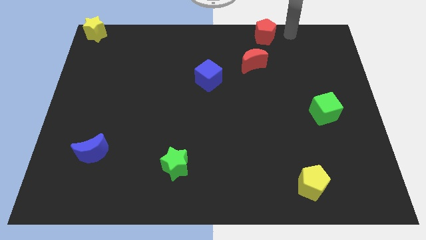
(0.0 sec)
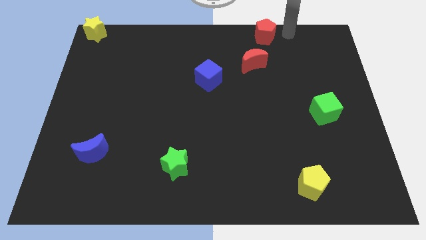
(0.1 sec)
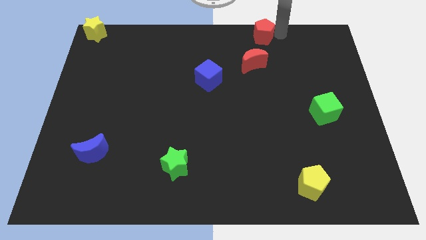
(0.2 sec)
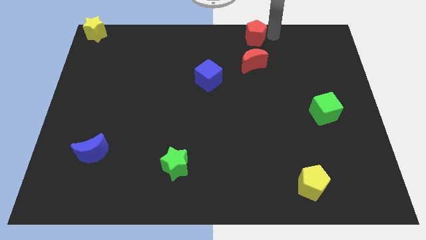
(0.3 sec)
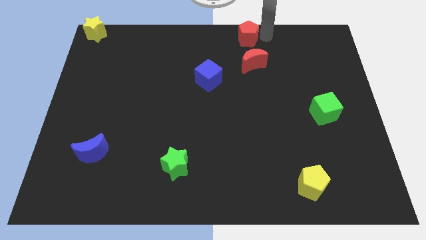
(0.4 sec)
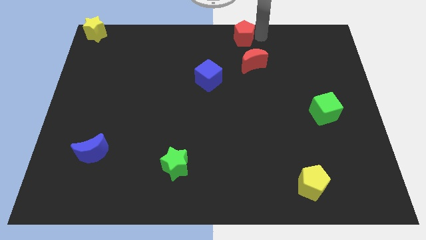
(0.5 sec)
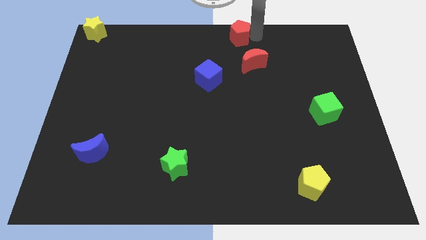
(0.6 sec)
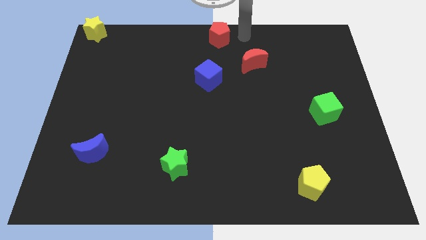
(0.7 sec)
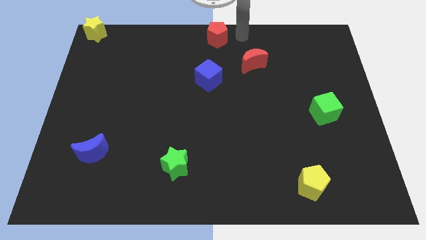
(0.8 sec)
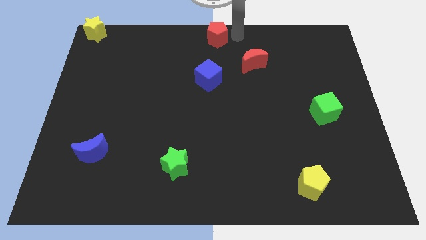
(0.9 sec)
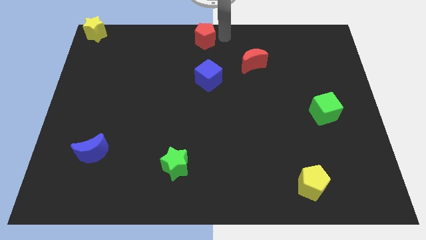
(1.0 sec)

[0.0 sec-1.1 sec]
push the red pentagon to the center top of the board

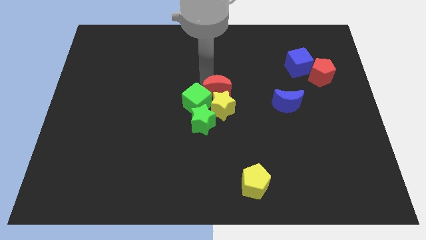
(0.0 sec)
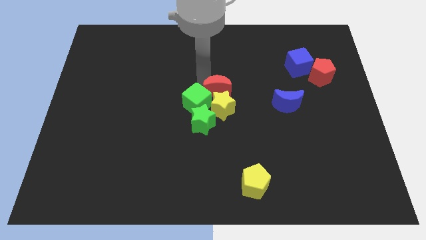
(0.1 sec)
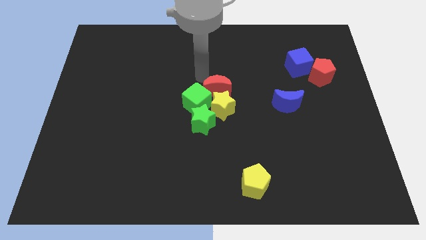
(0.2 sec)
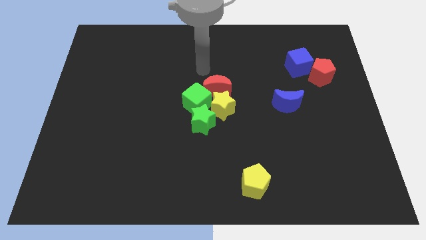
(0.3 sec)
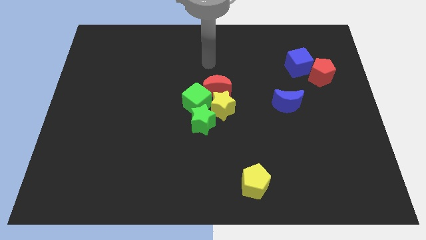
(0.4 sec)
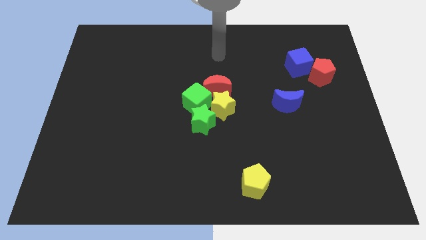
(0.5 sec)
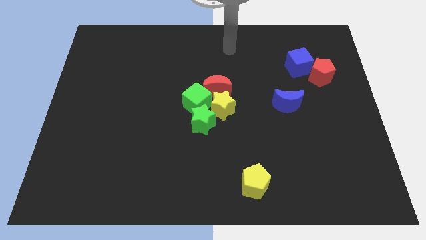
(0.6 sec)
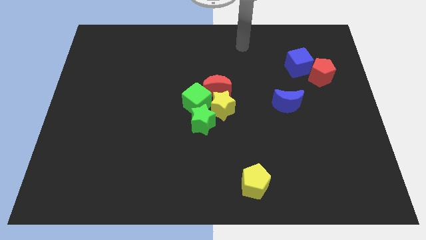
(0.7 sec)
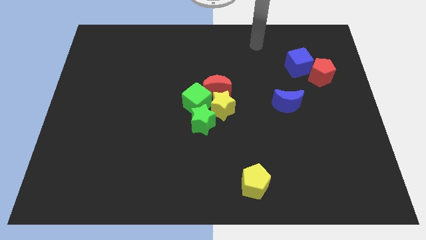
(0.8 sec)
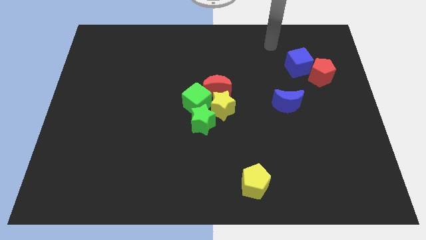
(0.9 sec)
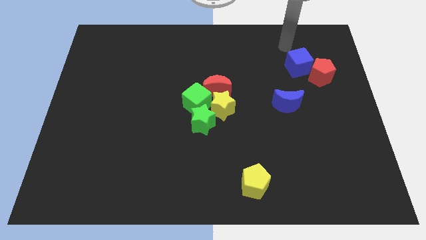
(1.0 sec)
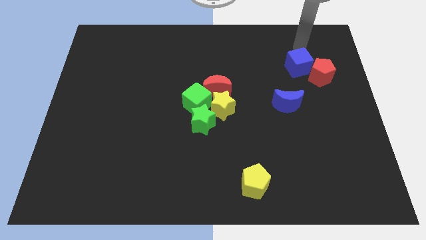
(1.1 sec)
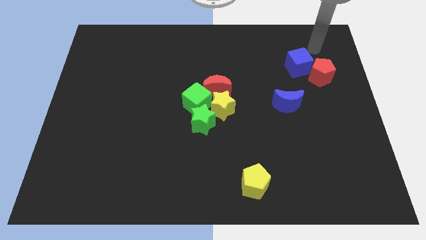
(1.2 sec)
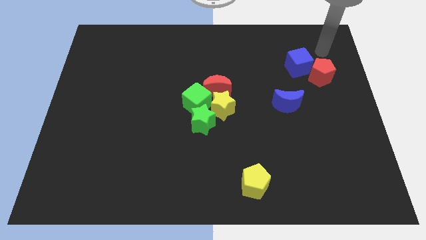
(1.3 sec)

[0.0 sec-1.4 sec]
move your arm close to the blue cube

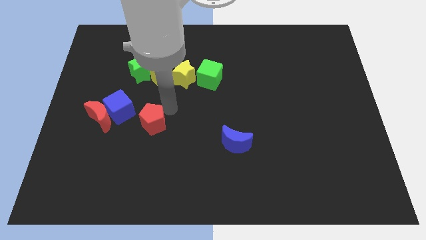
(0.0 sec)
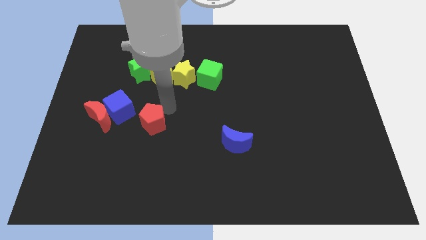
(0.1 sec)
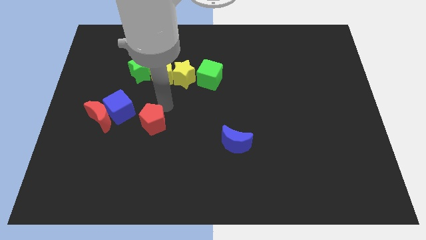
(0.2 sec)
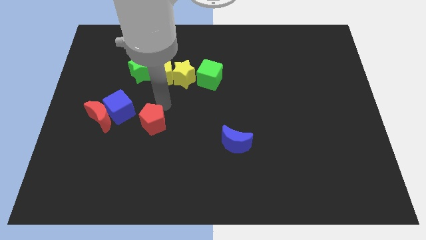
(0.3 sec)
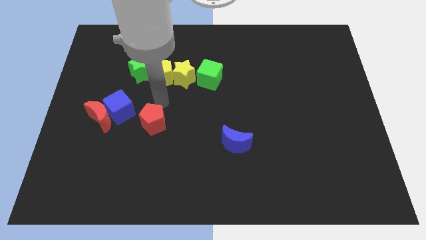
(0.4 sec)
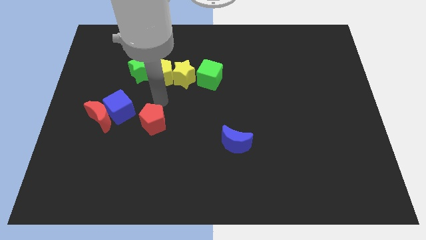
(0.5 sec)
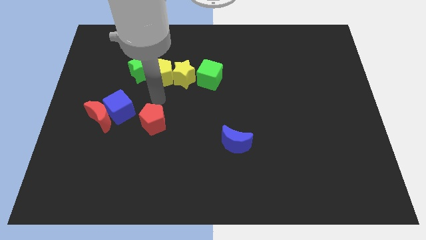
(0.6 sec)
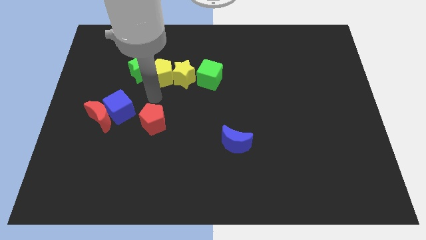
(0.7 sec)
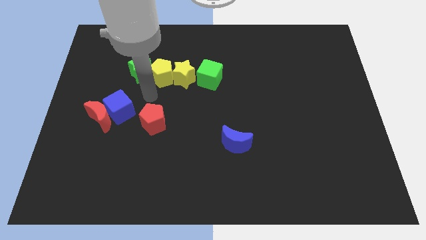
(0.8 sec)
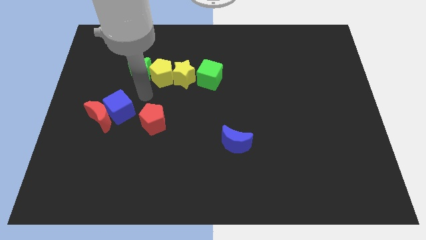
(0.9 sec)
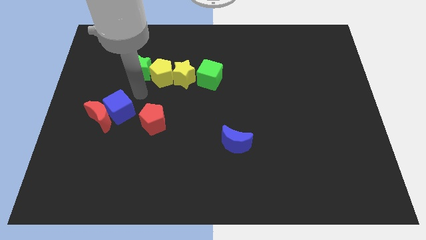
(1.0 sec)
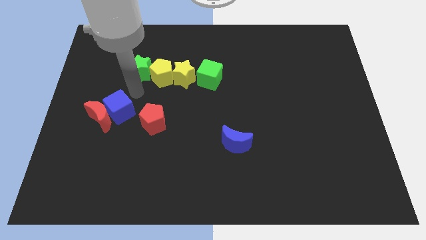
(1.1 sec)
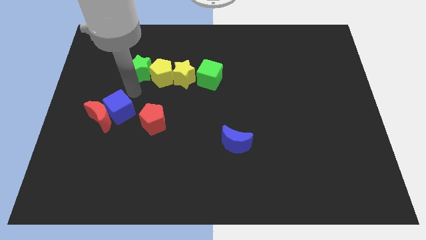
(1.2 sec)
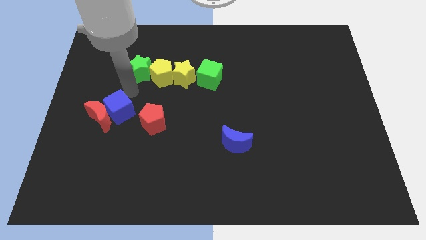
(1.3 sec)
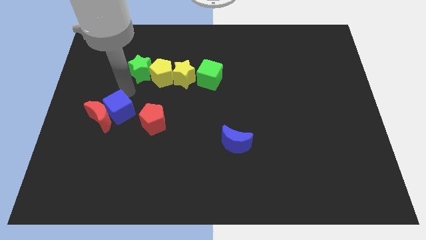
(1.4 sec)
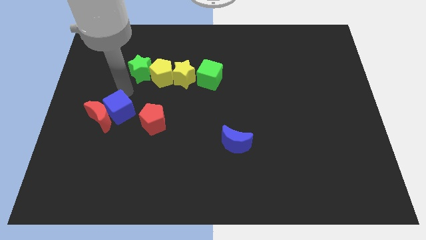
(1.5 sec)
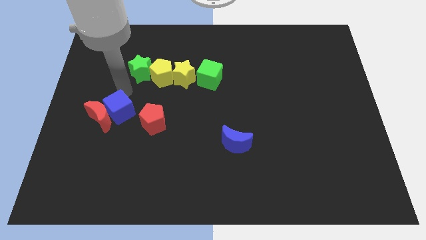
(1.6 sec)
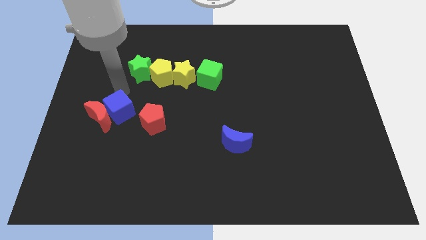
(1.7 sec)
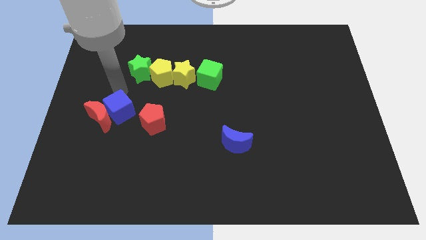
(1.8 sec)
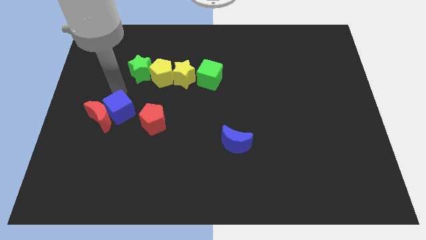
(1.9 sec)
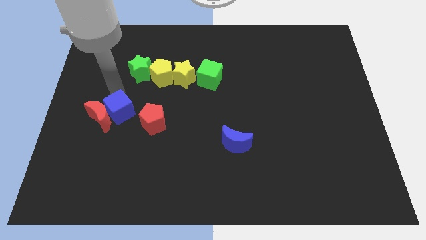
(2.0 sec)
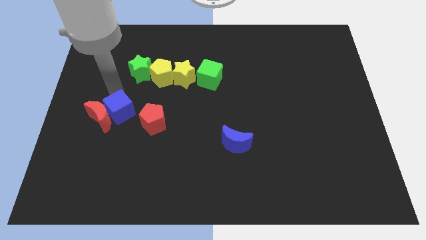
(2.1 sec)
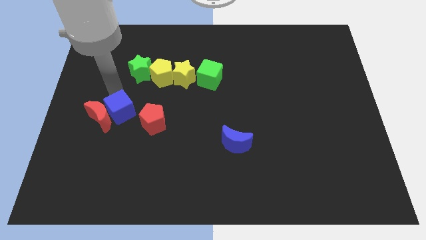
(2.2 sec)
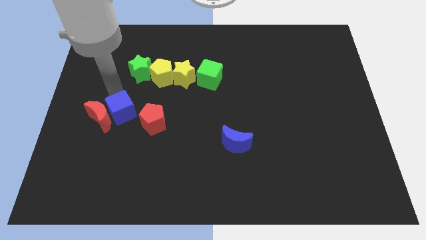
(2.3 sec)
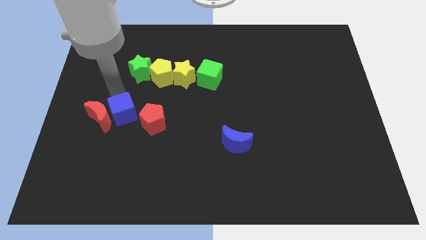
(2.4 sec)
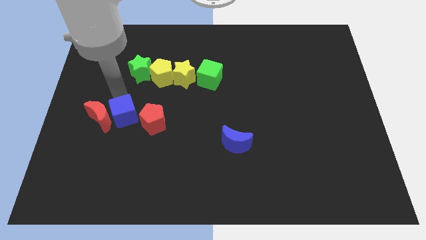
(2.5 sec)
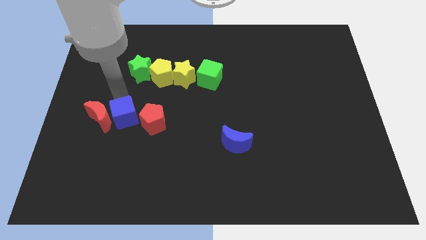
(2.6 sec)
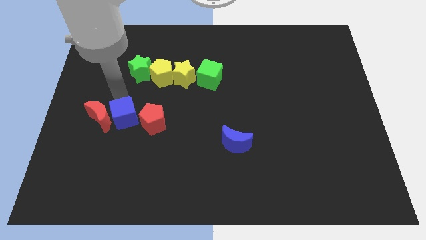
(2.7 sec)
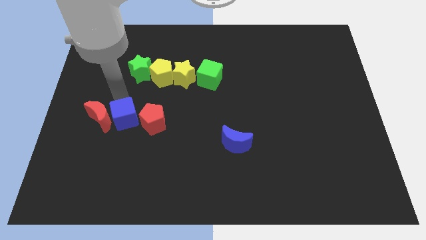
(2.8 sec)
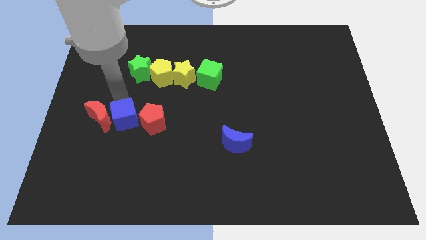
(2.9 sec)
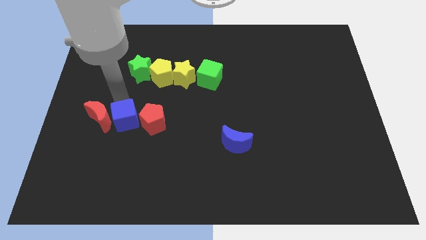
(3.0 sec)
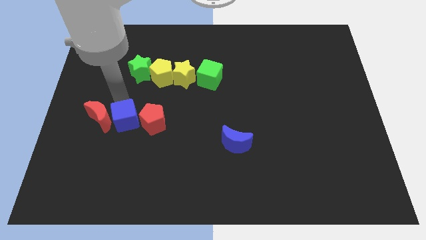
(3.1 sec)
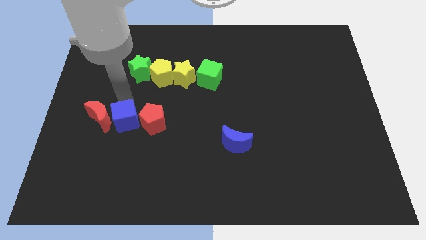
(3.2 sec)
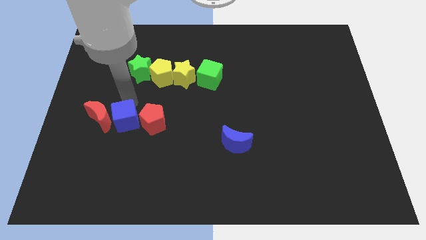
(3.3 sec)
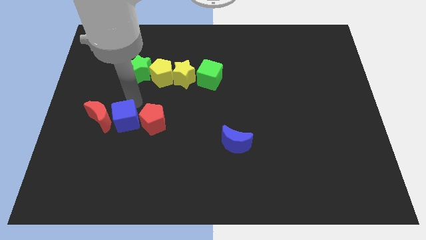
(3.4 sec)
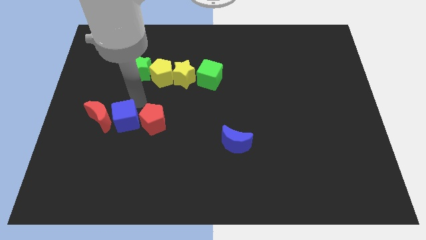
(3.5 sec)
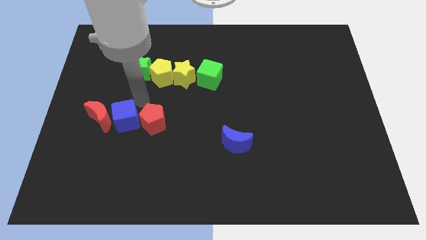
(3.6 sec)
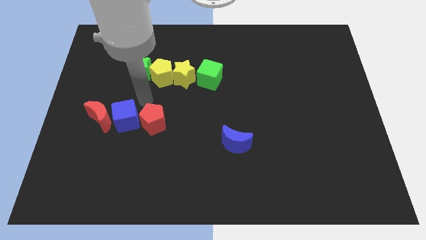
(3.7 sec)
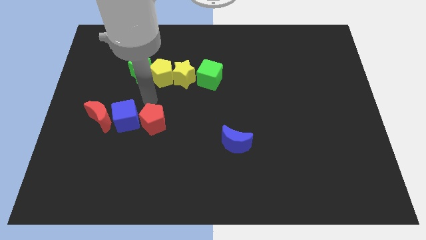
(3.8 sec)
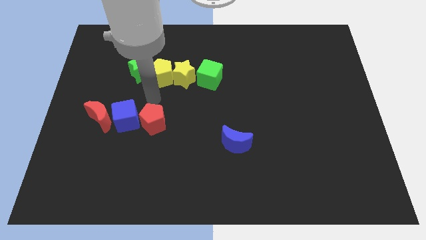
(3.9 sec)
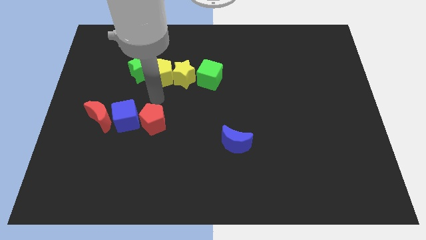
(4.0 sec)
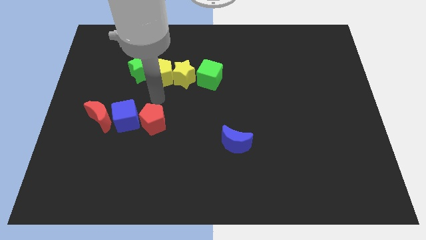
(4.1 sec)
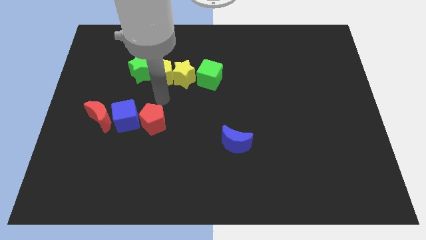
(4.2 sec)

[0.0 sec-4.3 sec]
place the blue cube in between red moon and red pentagon

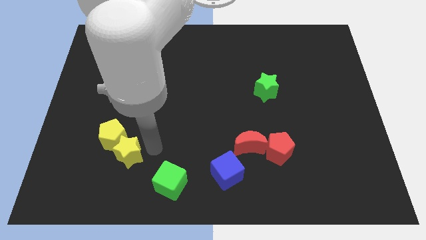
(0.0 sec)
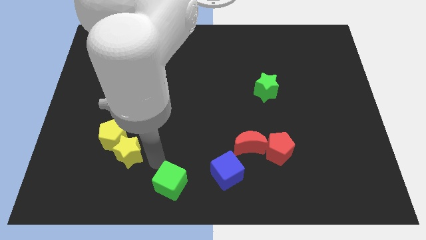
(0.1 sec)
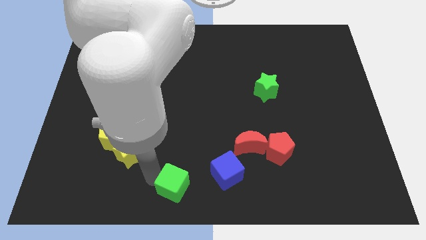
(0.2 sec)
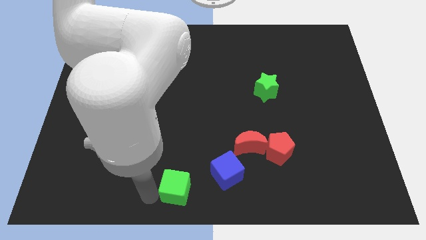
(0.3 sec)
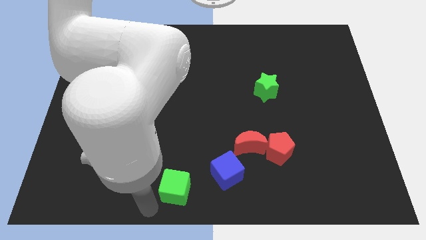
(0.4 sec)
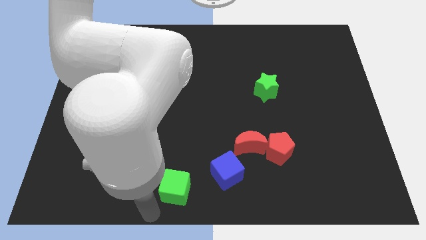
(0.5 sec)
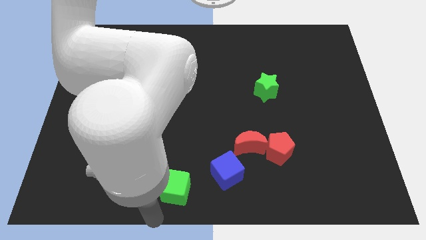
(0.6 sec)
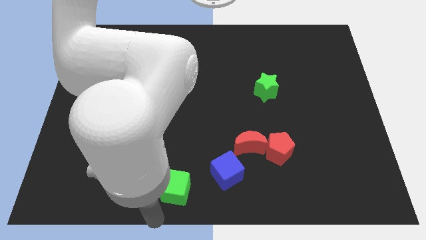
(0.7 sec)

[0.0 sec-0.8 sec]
slide the green cube down slightly

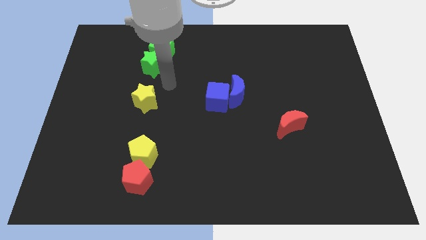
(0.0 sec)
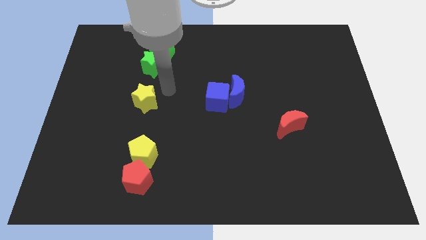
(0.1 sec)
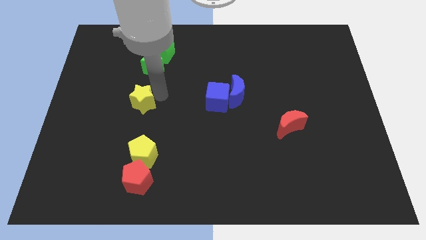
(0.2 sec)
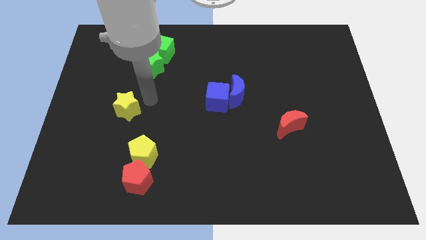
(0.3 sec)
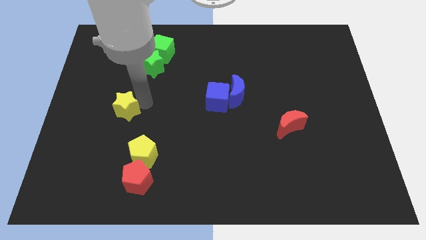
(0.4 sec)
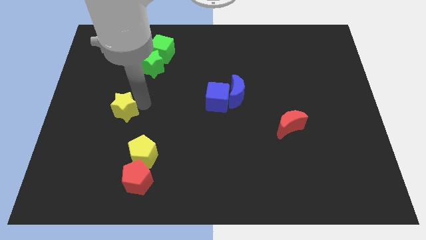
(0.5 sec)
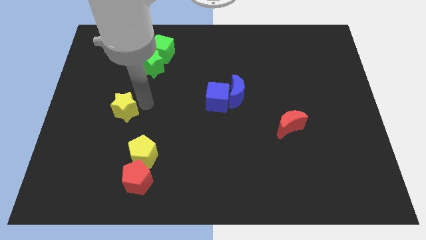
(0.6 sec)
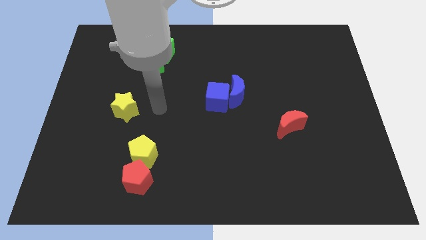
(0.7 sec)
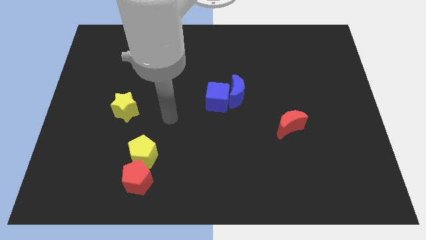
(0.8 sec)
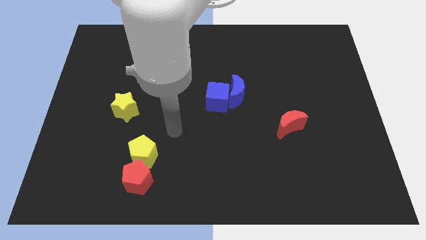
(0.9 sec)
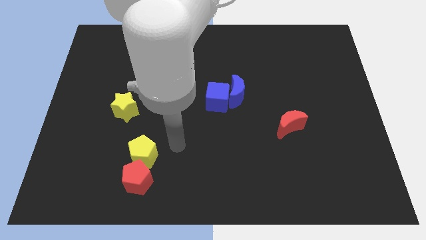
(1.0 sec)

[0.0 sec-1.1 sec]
slightly move the yellow star to the left of the board

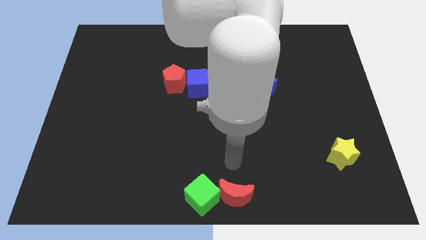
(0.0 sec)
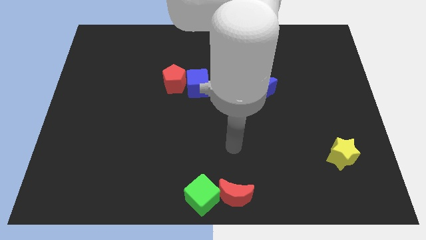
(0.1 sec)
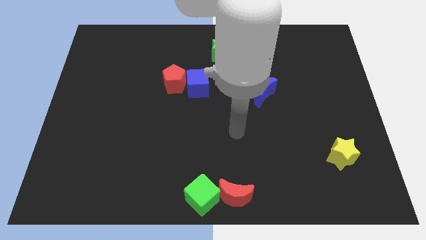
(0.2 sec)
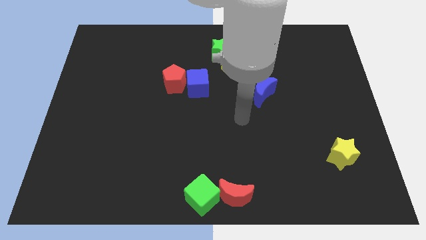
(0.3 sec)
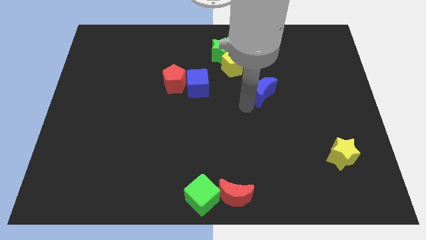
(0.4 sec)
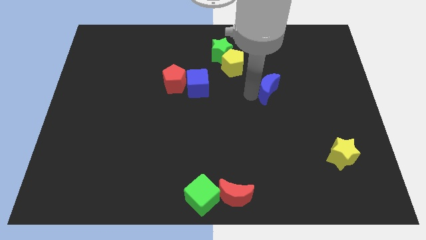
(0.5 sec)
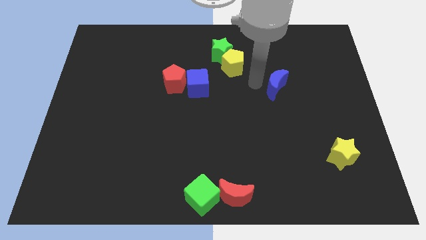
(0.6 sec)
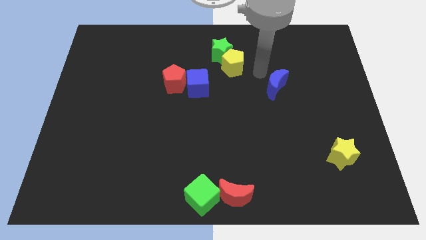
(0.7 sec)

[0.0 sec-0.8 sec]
slide the blue crescent up slightly
